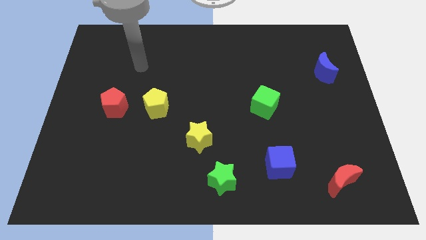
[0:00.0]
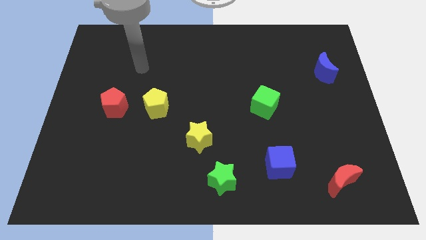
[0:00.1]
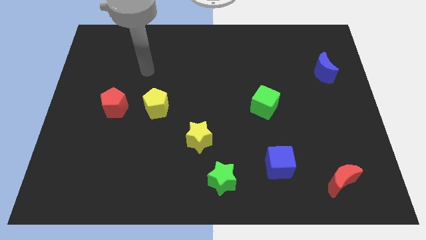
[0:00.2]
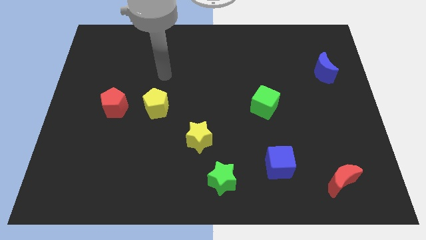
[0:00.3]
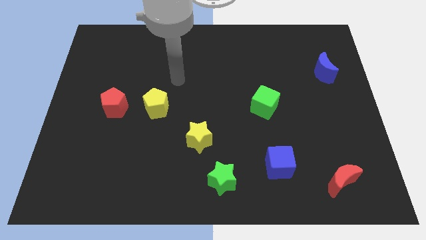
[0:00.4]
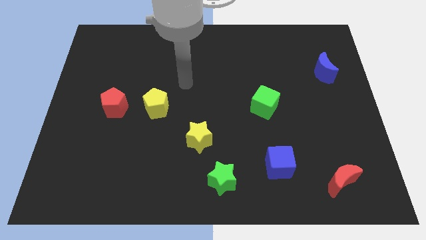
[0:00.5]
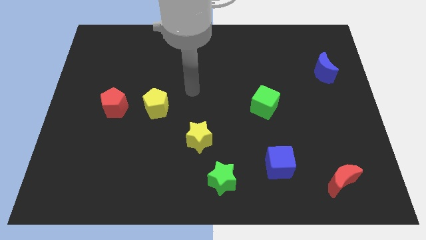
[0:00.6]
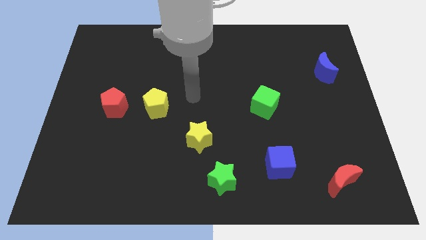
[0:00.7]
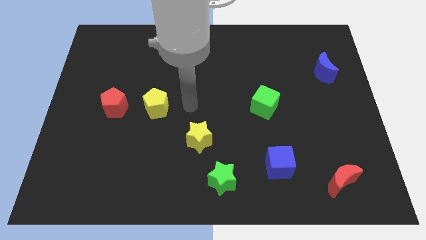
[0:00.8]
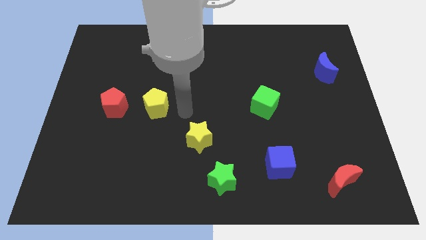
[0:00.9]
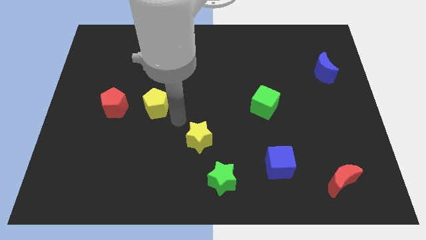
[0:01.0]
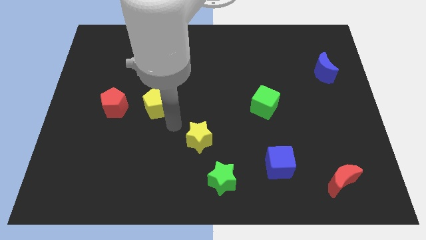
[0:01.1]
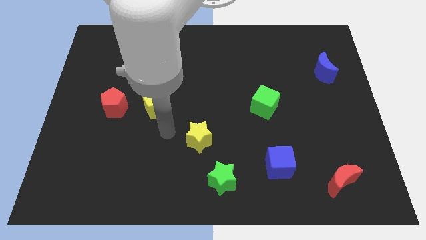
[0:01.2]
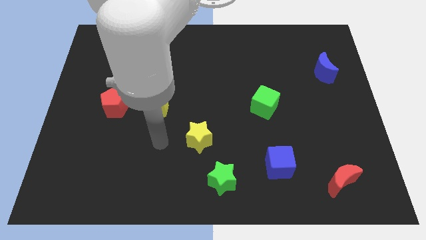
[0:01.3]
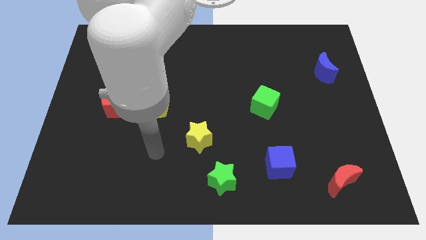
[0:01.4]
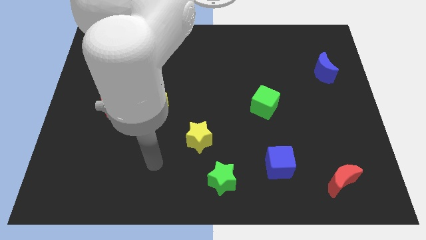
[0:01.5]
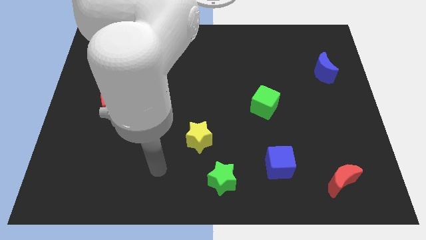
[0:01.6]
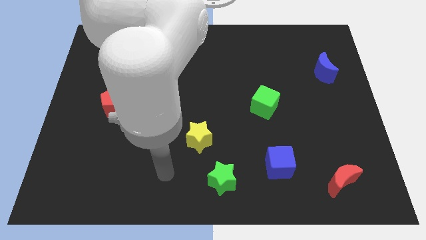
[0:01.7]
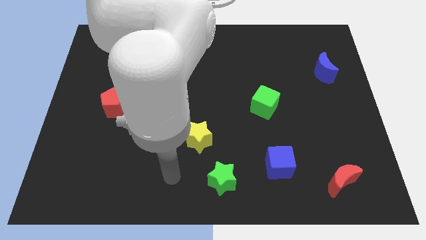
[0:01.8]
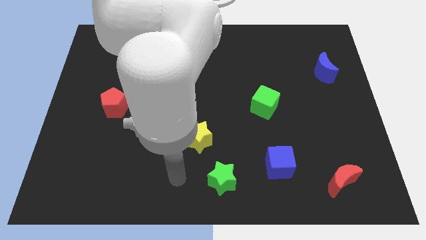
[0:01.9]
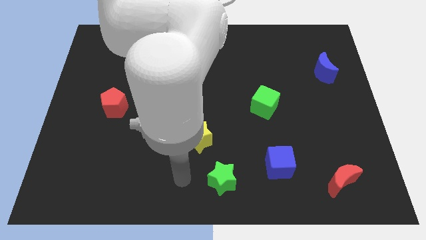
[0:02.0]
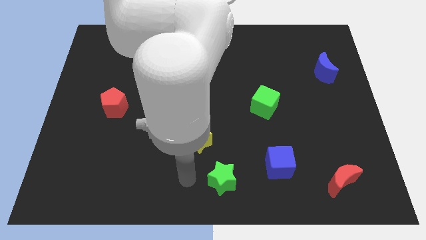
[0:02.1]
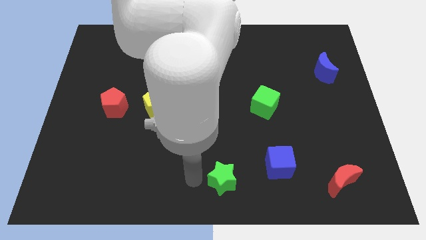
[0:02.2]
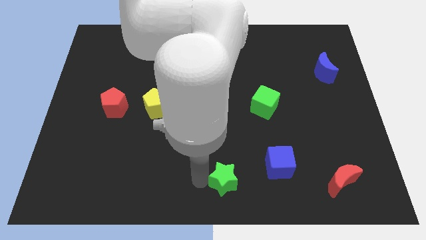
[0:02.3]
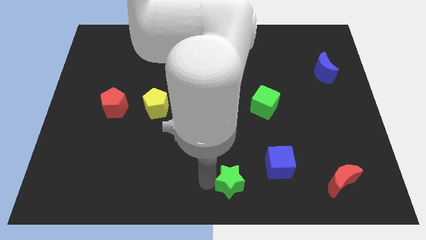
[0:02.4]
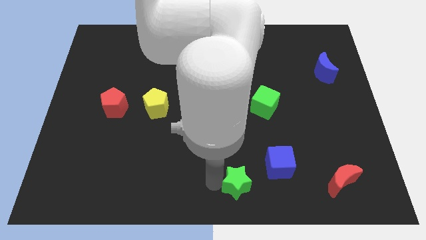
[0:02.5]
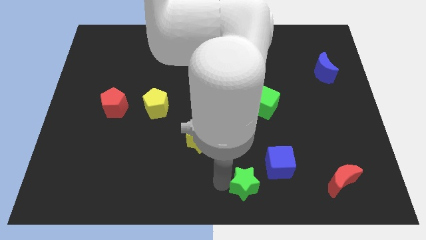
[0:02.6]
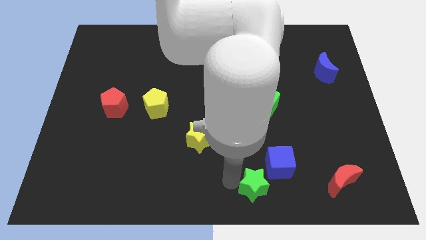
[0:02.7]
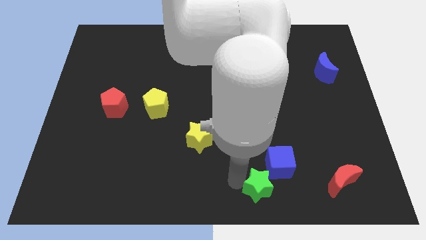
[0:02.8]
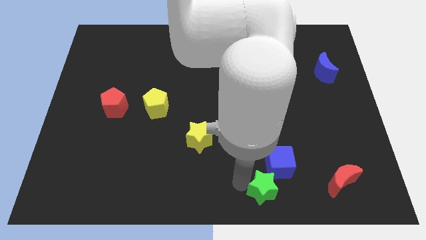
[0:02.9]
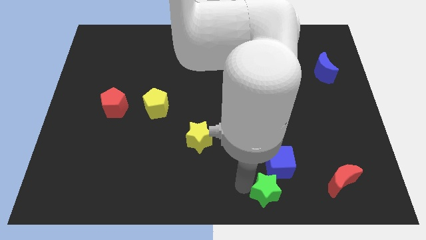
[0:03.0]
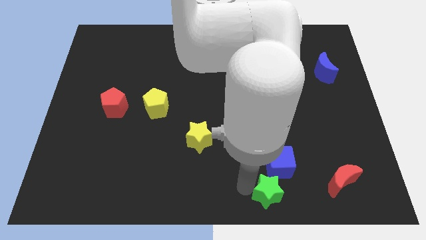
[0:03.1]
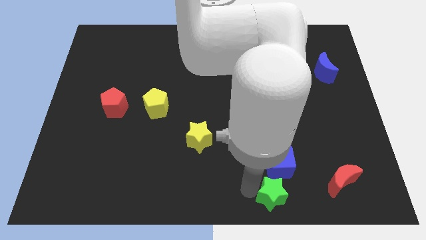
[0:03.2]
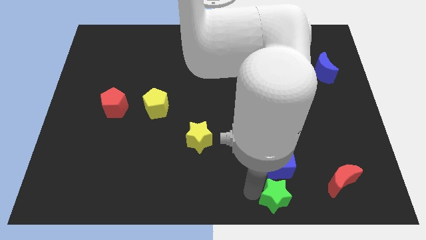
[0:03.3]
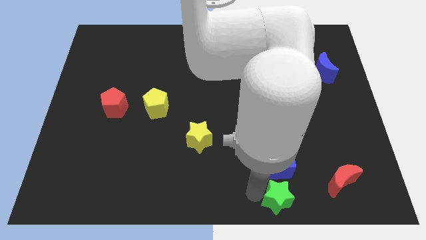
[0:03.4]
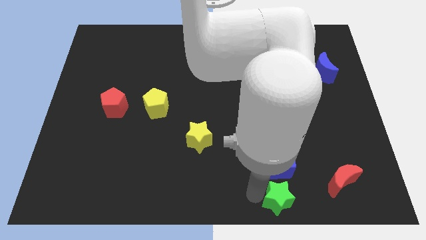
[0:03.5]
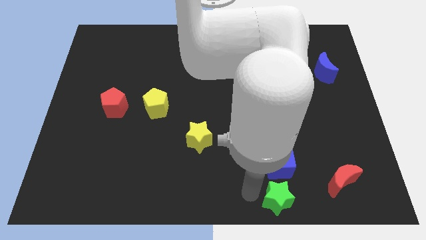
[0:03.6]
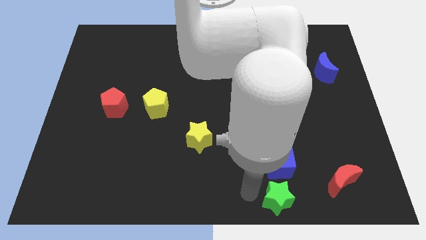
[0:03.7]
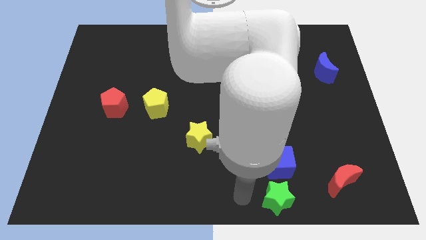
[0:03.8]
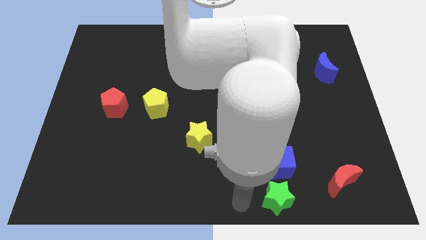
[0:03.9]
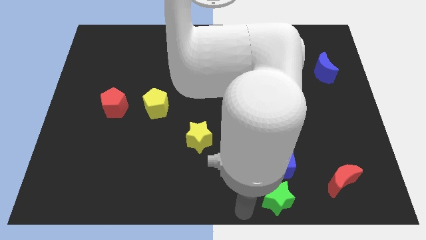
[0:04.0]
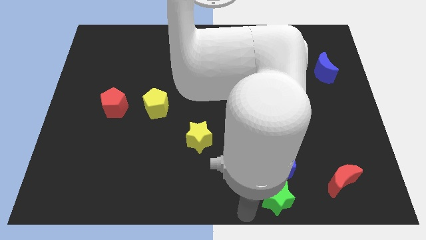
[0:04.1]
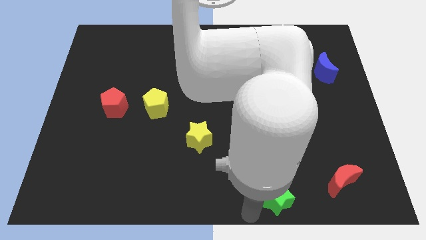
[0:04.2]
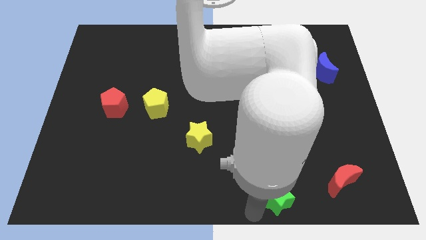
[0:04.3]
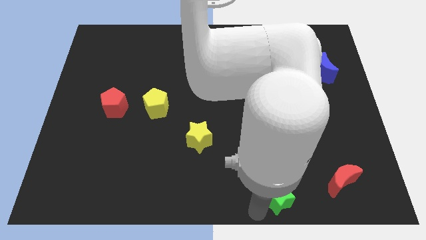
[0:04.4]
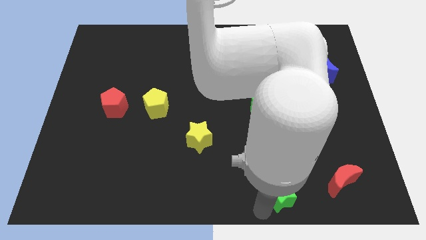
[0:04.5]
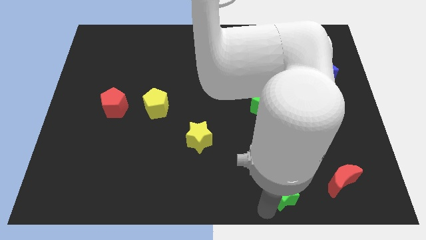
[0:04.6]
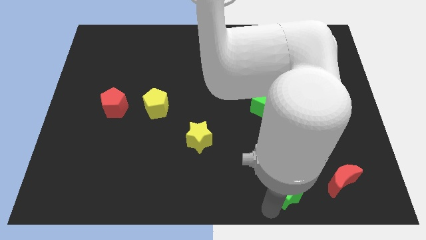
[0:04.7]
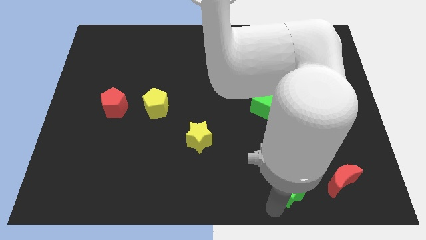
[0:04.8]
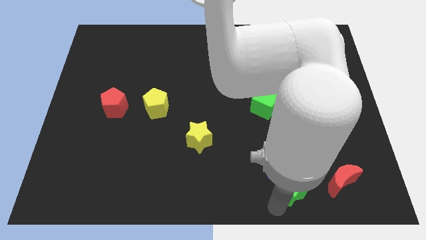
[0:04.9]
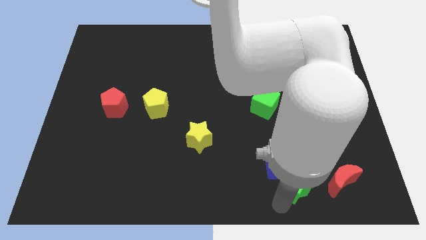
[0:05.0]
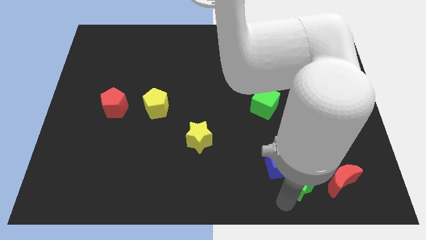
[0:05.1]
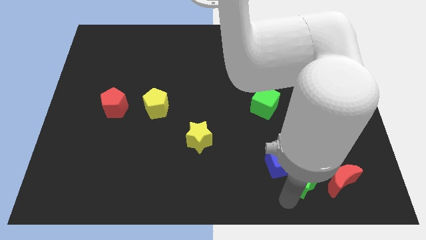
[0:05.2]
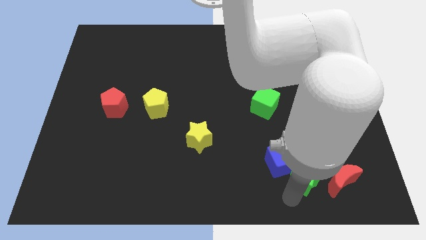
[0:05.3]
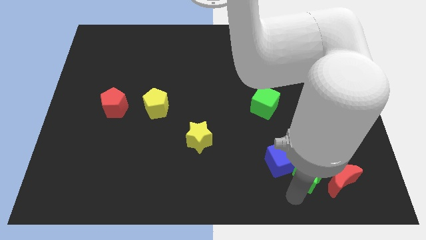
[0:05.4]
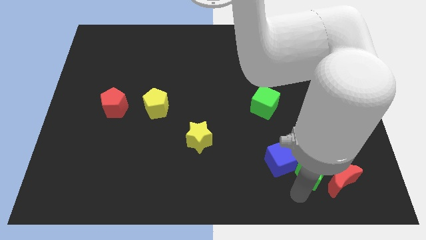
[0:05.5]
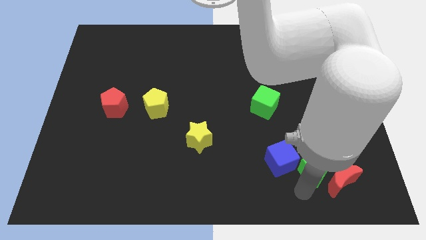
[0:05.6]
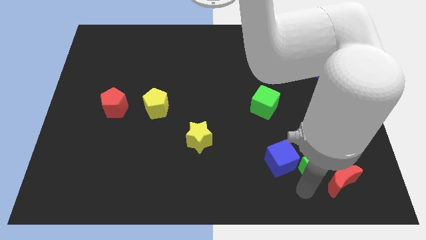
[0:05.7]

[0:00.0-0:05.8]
push the green star towards the red moon

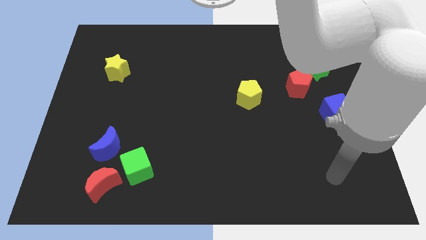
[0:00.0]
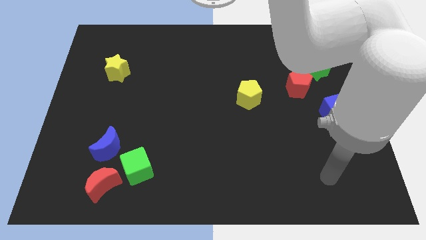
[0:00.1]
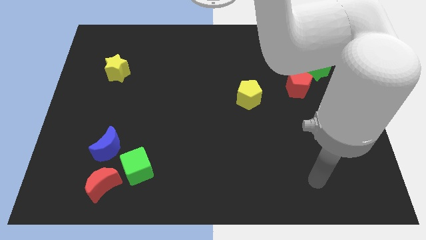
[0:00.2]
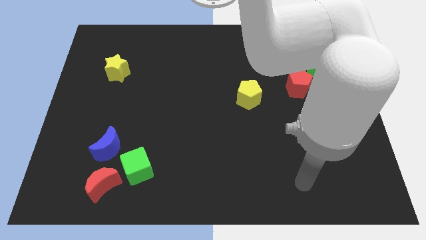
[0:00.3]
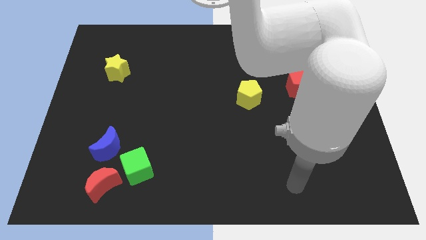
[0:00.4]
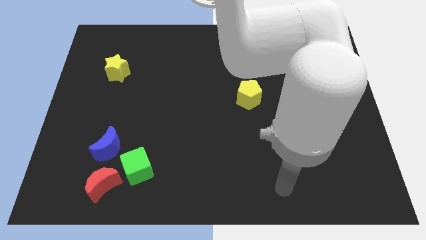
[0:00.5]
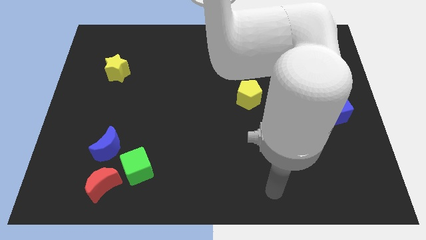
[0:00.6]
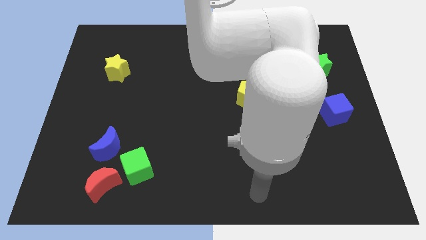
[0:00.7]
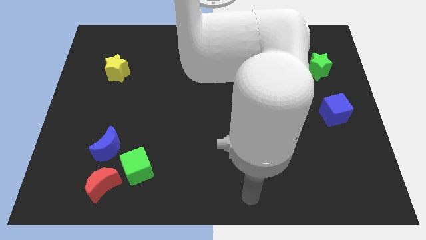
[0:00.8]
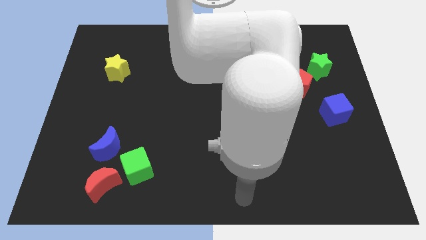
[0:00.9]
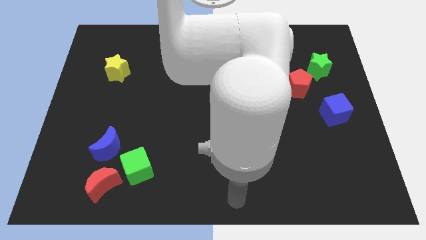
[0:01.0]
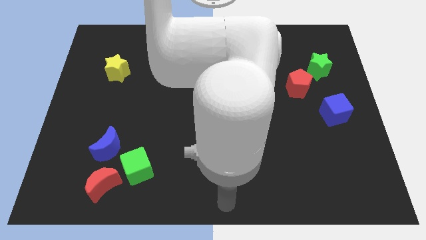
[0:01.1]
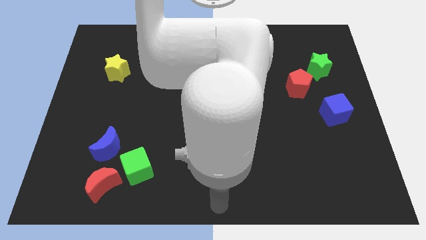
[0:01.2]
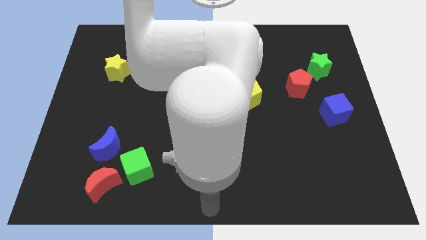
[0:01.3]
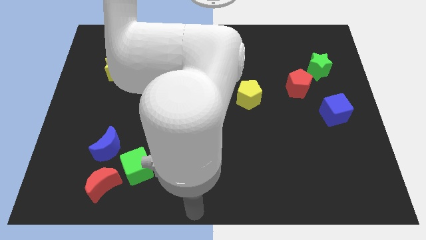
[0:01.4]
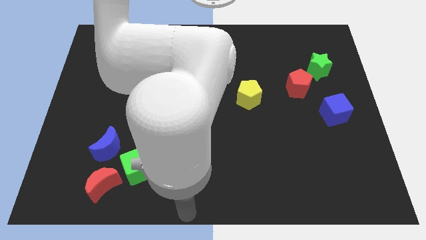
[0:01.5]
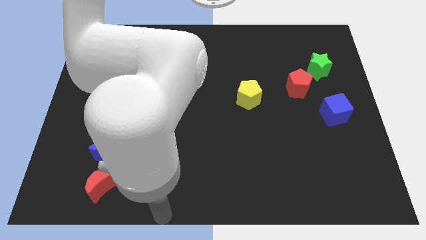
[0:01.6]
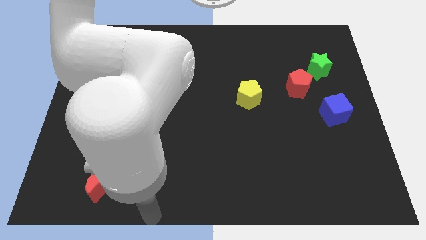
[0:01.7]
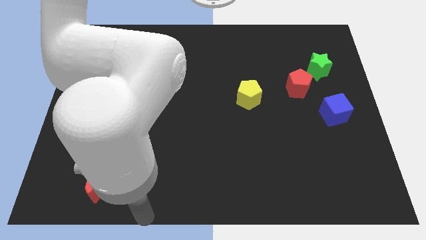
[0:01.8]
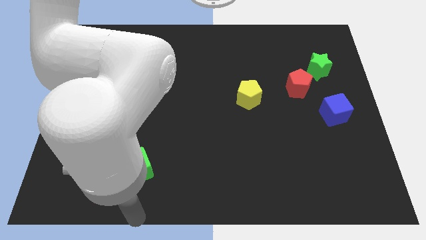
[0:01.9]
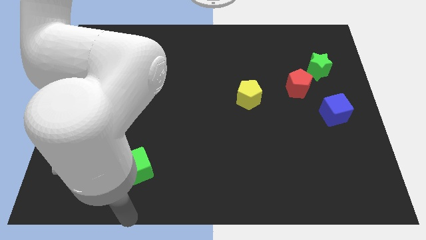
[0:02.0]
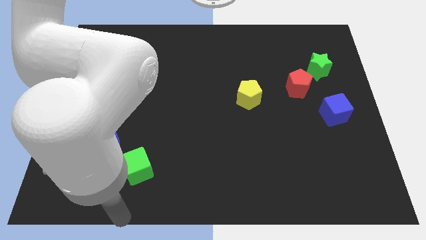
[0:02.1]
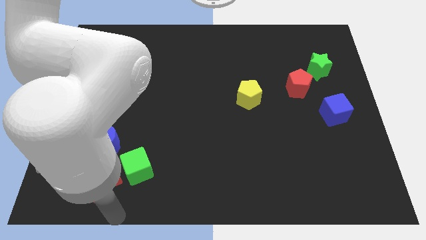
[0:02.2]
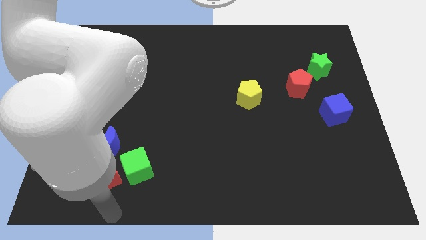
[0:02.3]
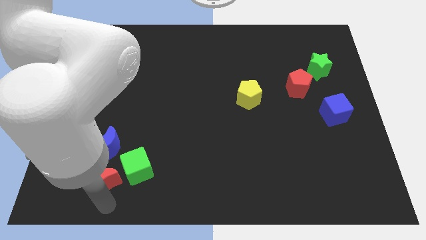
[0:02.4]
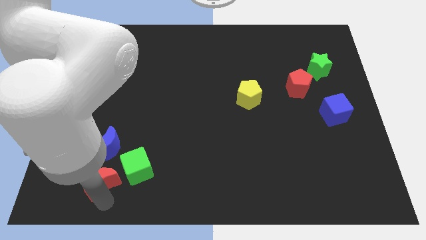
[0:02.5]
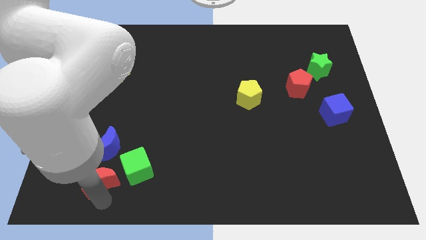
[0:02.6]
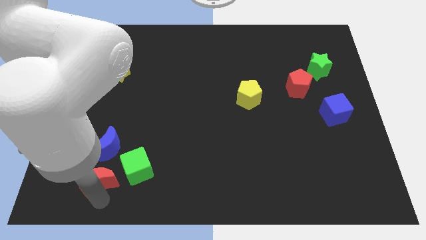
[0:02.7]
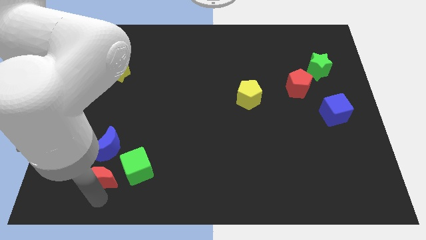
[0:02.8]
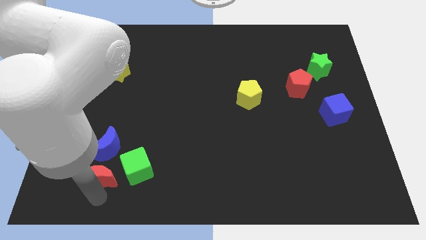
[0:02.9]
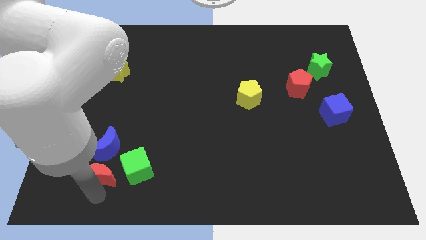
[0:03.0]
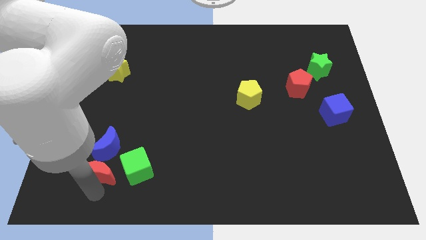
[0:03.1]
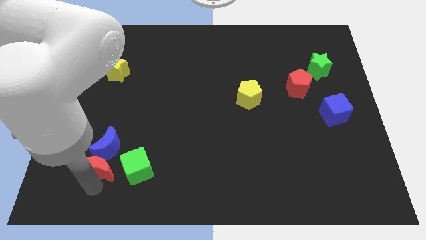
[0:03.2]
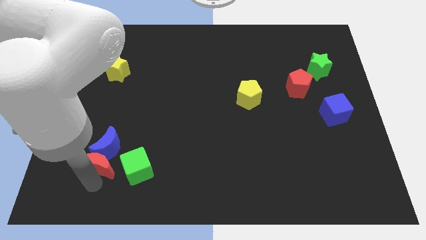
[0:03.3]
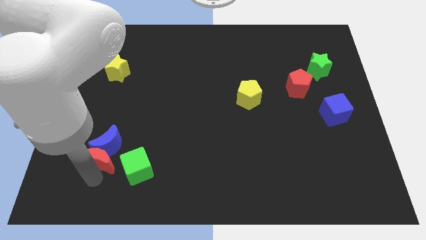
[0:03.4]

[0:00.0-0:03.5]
push the red moon next to the blue moon
